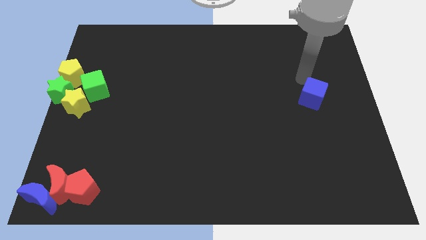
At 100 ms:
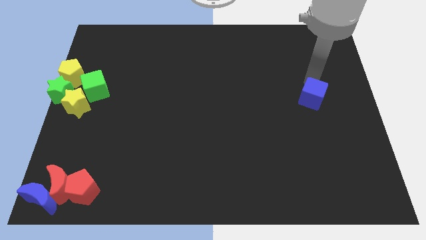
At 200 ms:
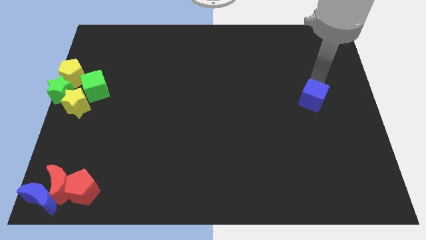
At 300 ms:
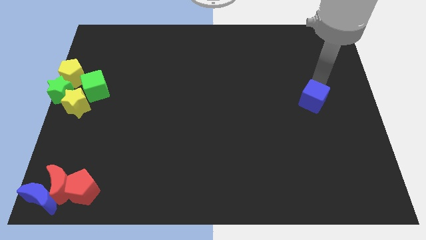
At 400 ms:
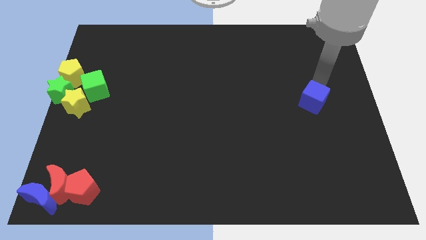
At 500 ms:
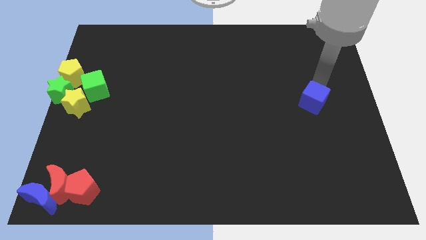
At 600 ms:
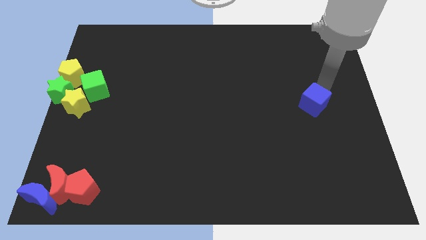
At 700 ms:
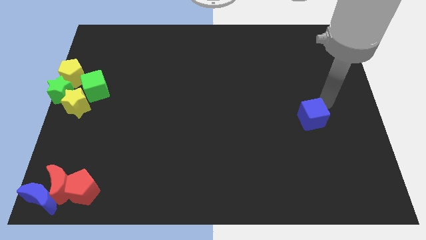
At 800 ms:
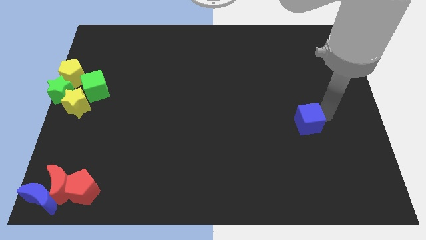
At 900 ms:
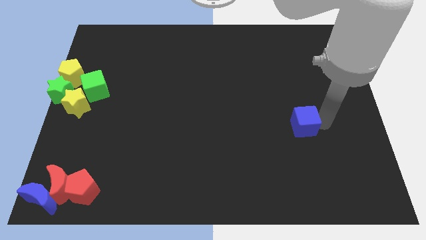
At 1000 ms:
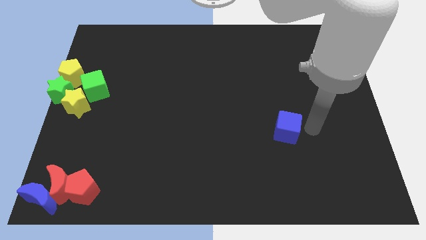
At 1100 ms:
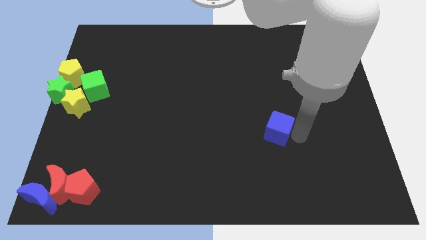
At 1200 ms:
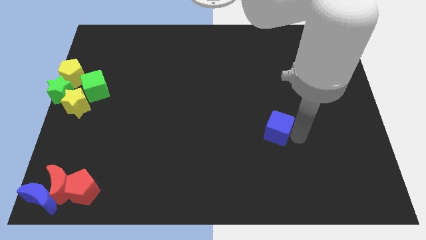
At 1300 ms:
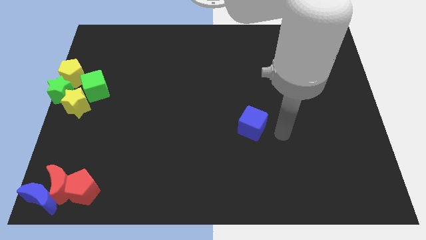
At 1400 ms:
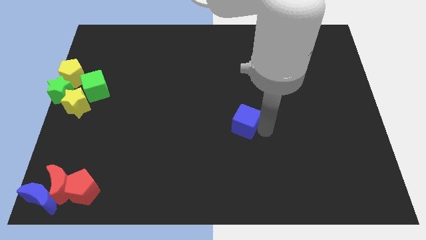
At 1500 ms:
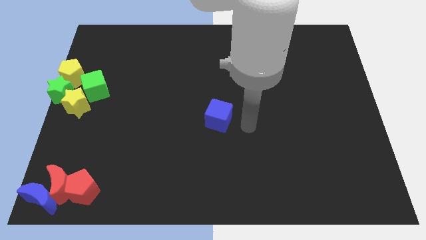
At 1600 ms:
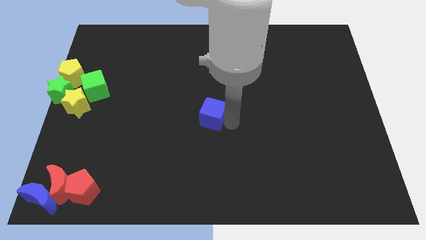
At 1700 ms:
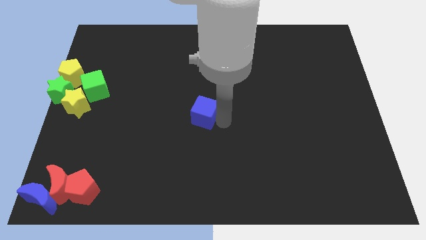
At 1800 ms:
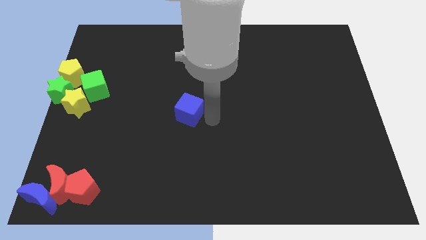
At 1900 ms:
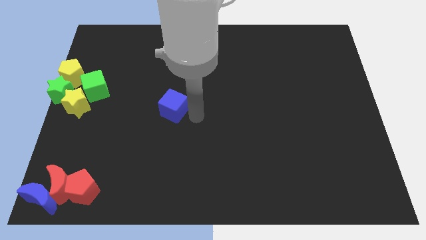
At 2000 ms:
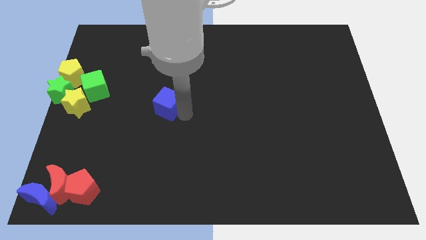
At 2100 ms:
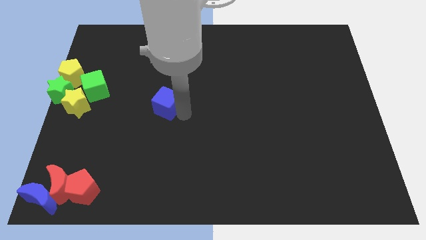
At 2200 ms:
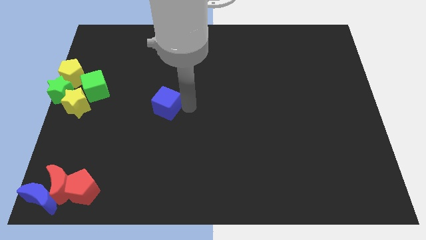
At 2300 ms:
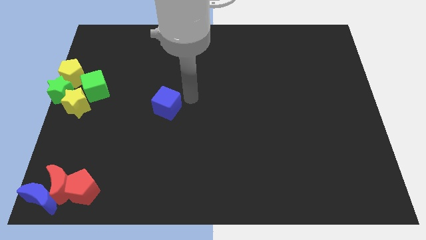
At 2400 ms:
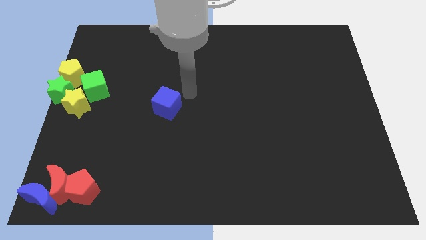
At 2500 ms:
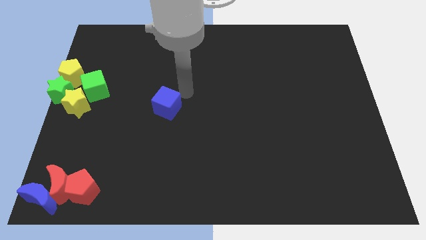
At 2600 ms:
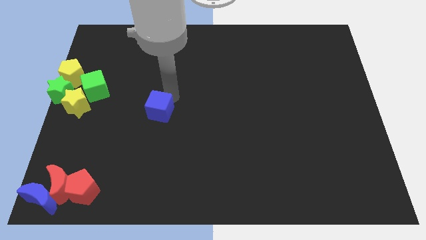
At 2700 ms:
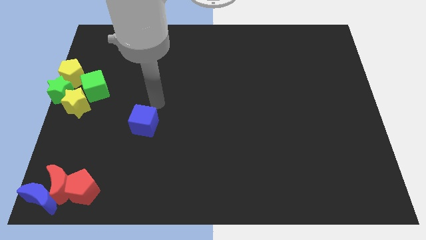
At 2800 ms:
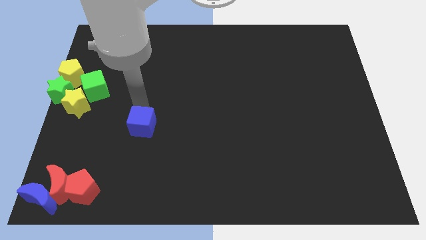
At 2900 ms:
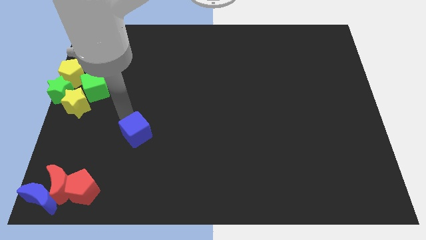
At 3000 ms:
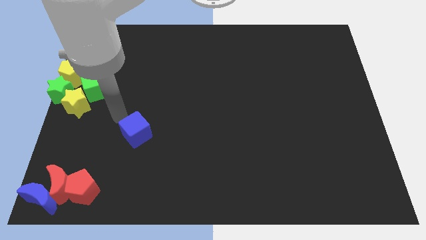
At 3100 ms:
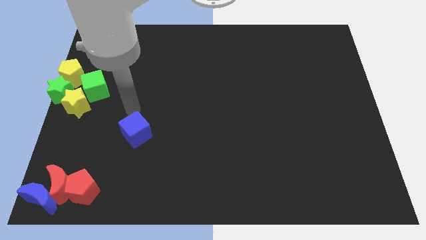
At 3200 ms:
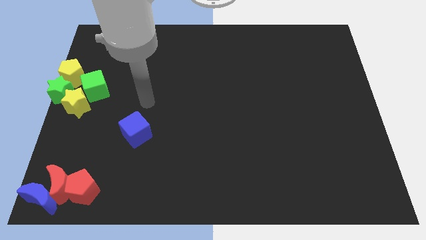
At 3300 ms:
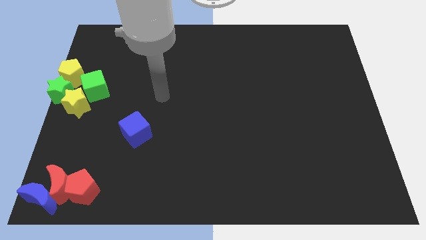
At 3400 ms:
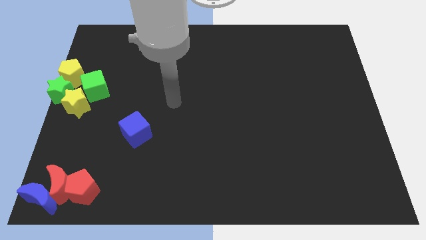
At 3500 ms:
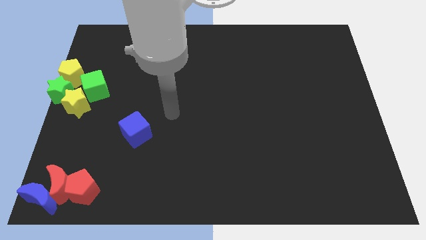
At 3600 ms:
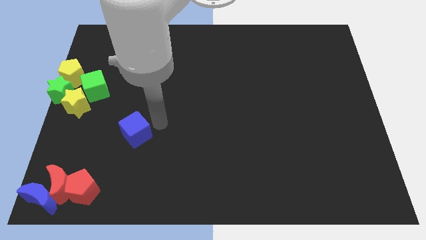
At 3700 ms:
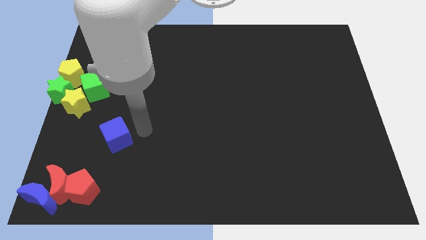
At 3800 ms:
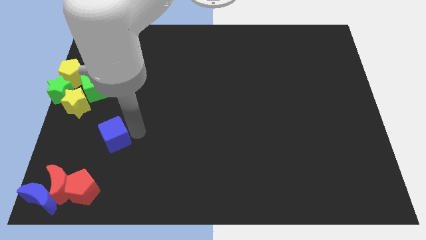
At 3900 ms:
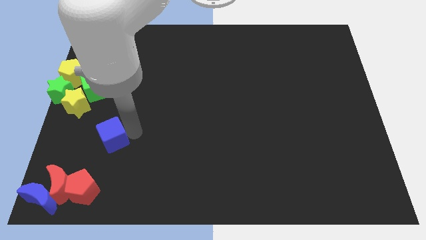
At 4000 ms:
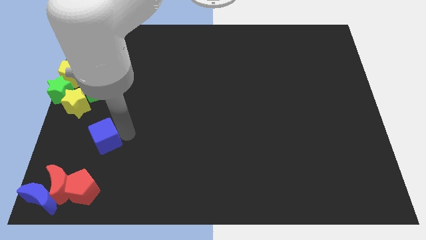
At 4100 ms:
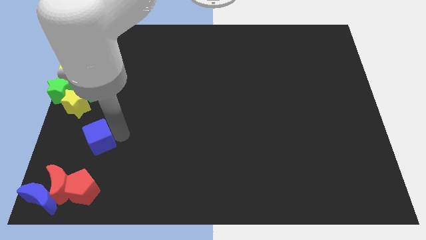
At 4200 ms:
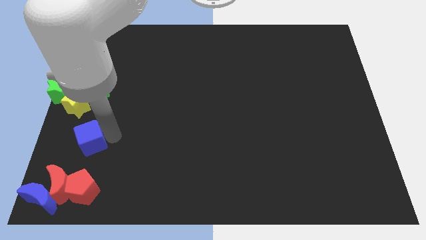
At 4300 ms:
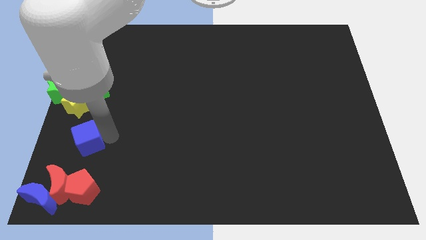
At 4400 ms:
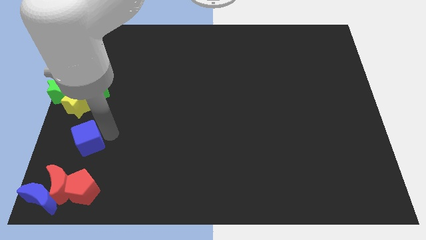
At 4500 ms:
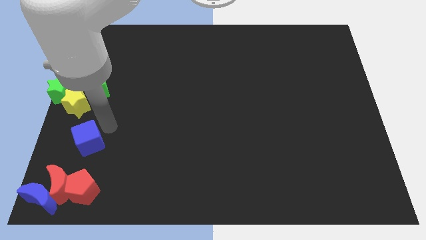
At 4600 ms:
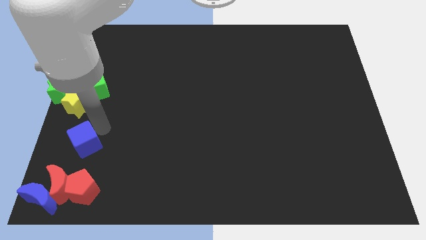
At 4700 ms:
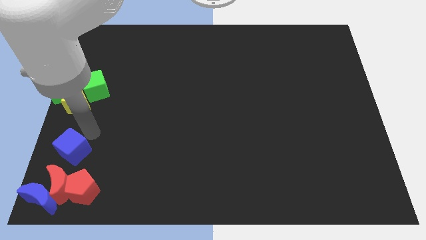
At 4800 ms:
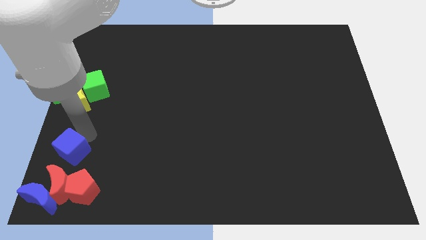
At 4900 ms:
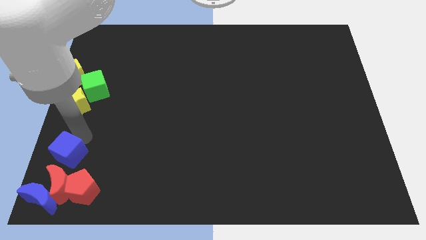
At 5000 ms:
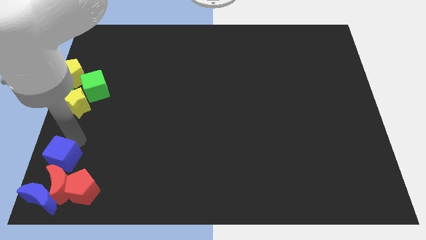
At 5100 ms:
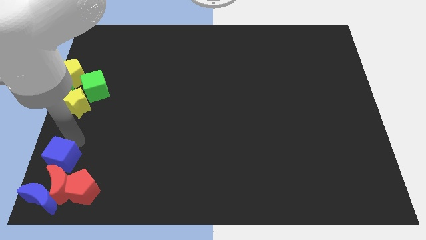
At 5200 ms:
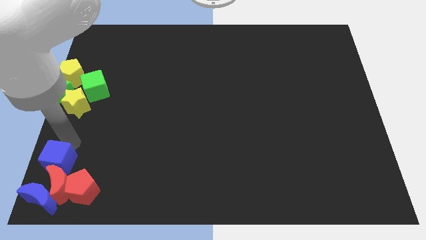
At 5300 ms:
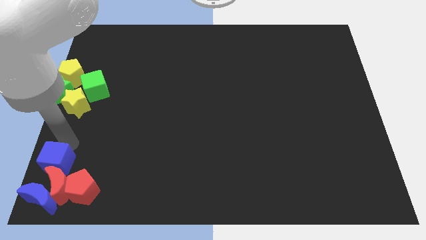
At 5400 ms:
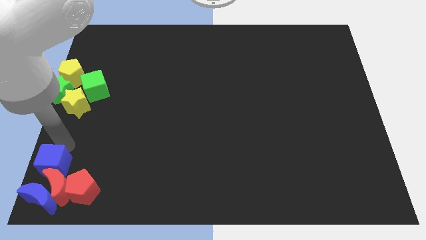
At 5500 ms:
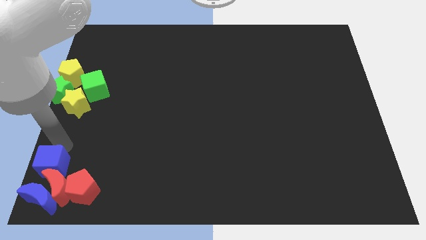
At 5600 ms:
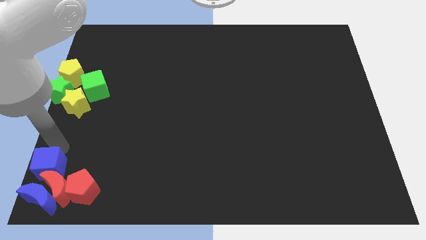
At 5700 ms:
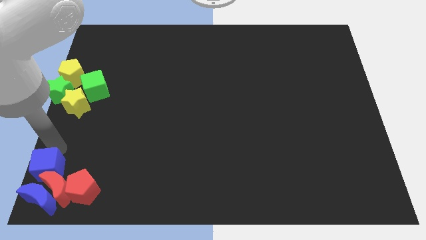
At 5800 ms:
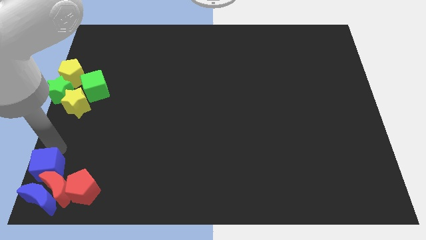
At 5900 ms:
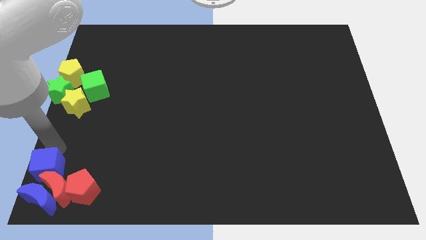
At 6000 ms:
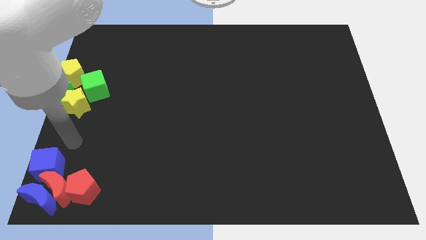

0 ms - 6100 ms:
place the blue cube to the top of red crescent

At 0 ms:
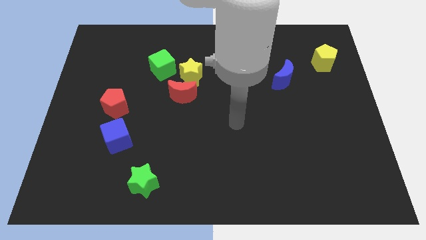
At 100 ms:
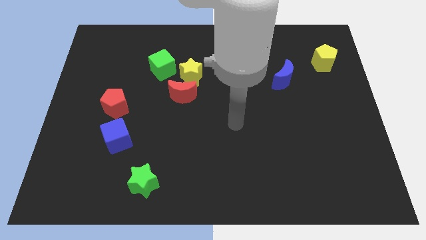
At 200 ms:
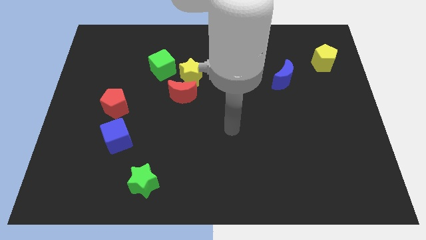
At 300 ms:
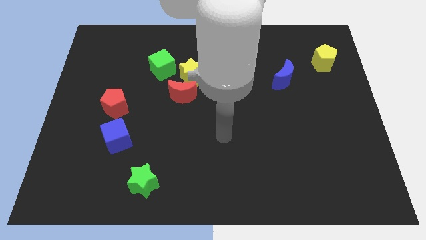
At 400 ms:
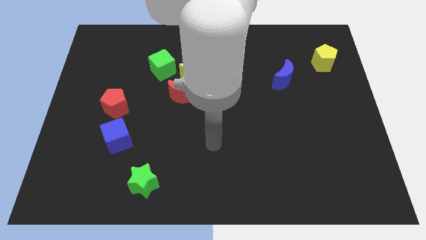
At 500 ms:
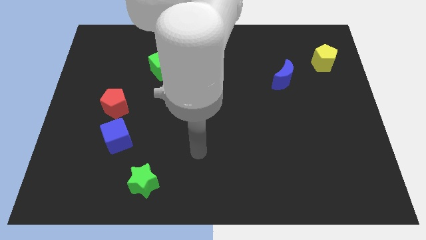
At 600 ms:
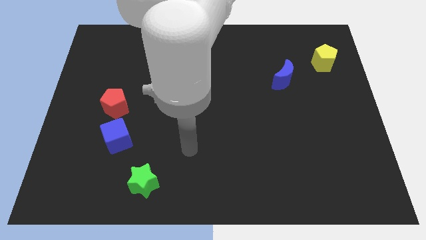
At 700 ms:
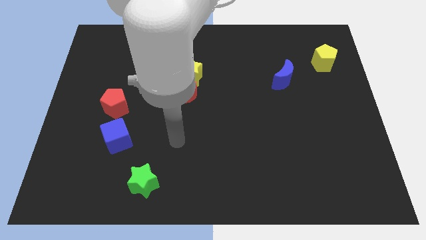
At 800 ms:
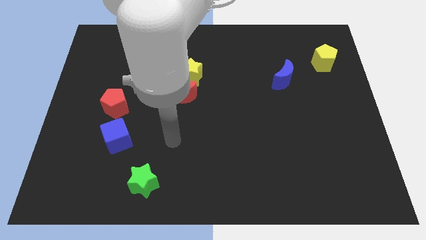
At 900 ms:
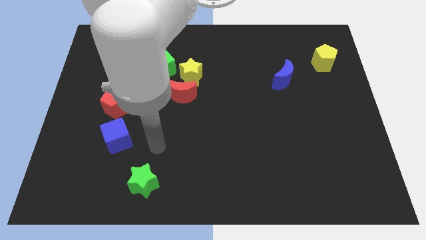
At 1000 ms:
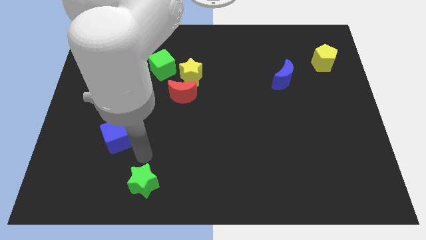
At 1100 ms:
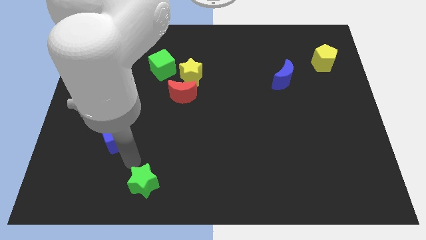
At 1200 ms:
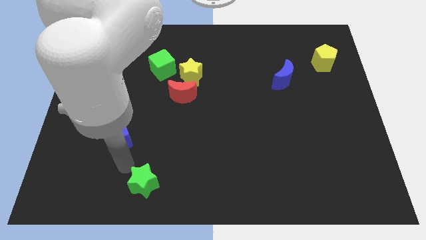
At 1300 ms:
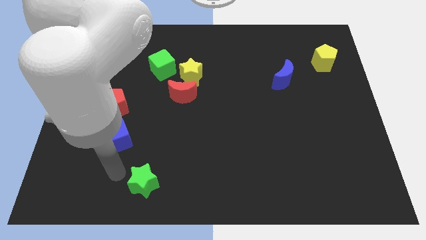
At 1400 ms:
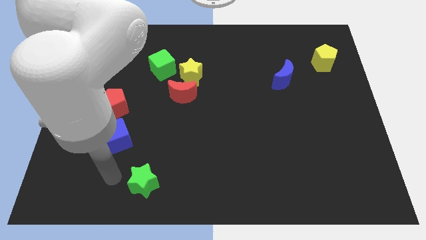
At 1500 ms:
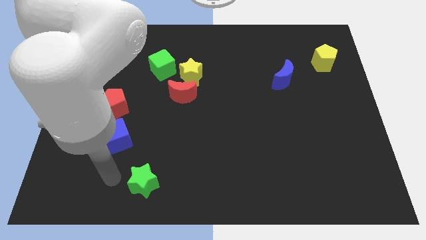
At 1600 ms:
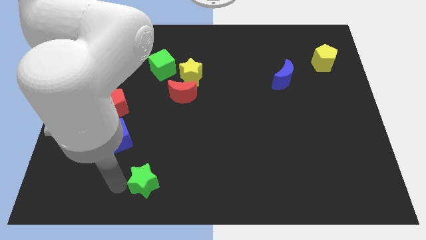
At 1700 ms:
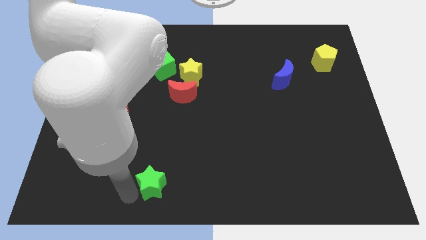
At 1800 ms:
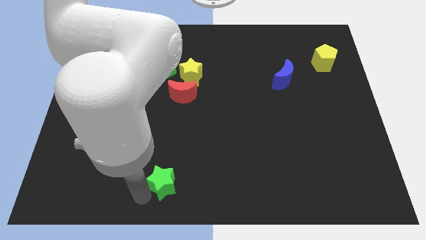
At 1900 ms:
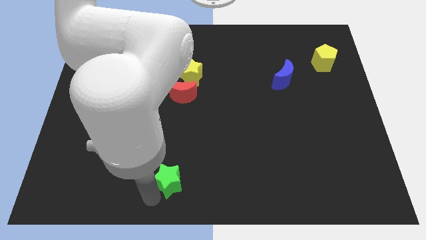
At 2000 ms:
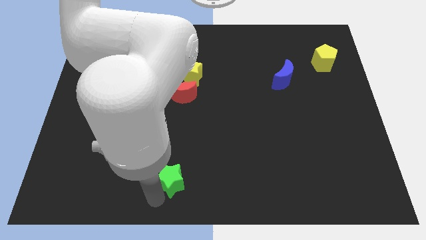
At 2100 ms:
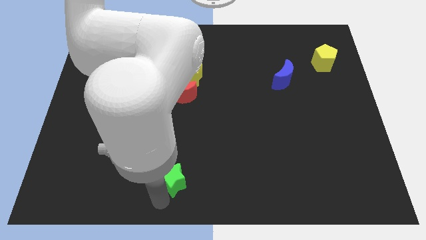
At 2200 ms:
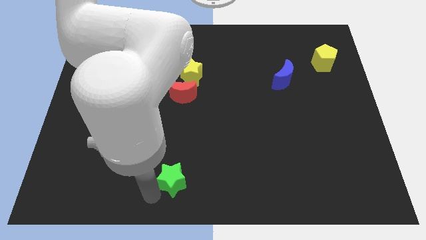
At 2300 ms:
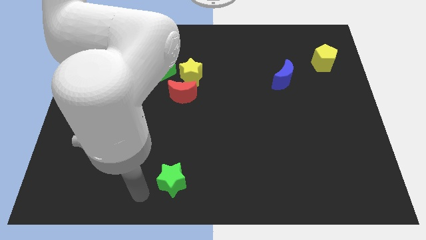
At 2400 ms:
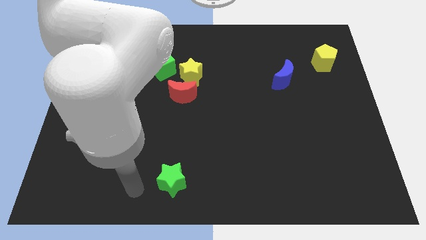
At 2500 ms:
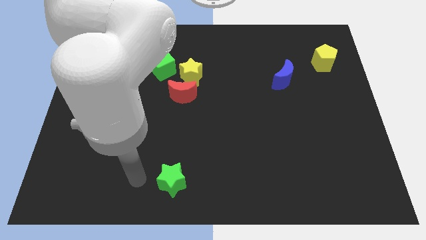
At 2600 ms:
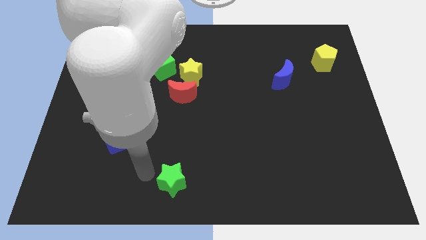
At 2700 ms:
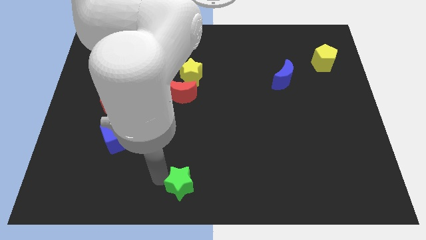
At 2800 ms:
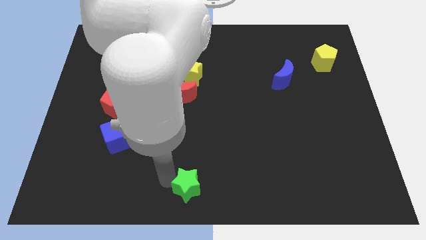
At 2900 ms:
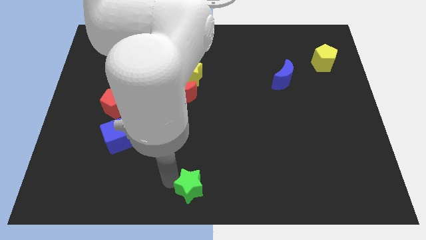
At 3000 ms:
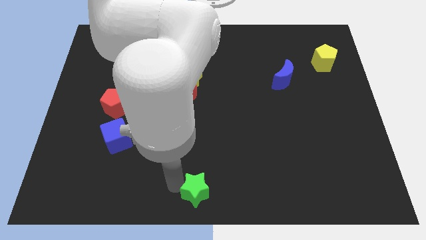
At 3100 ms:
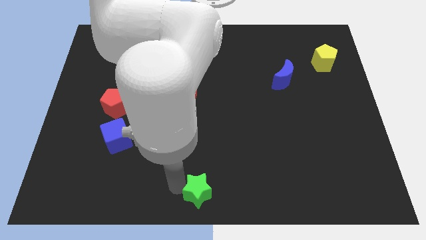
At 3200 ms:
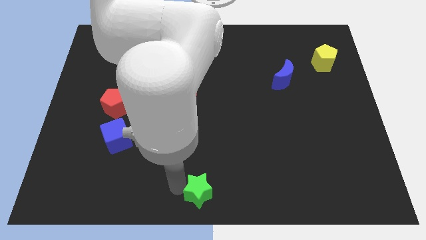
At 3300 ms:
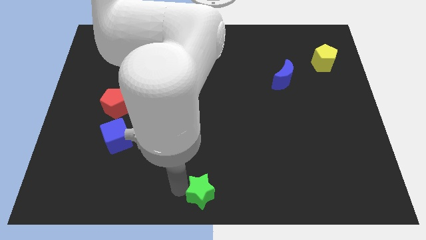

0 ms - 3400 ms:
put the green star at the bottom center of the board
